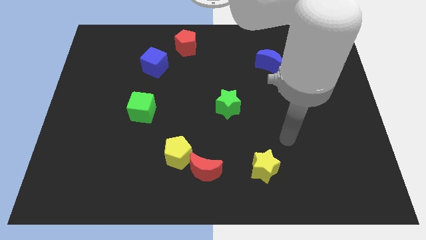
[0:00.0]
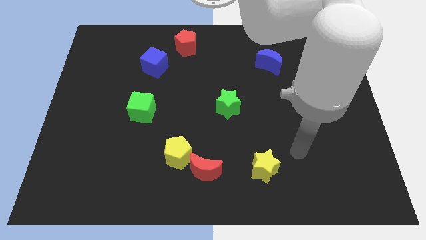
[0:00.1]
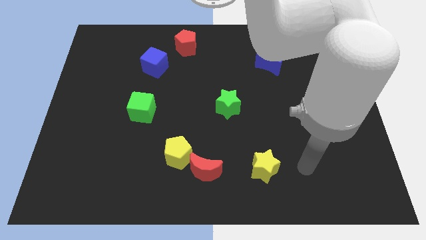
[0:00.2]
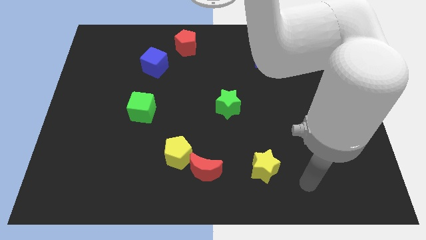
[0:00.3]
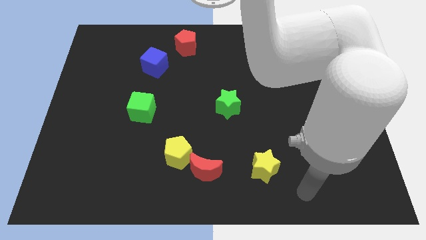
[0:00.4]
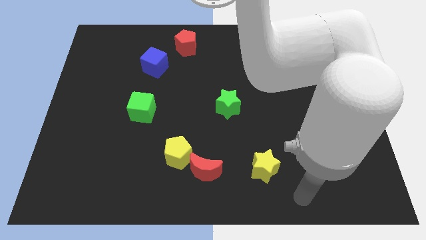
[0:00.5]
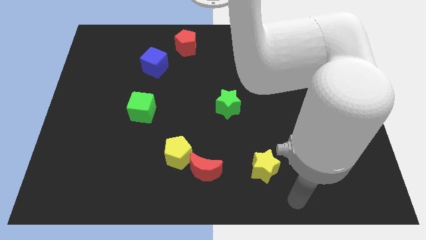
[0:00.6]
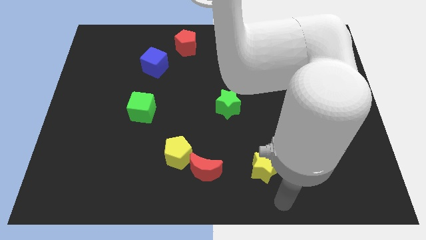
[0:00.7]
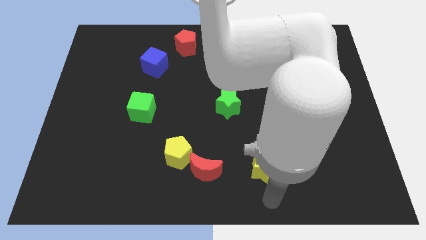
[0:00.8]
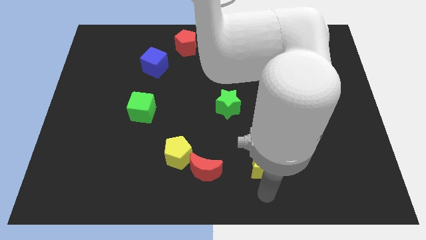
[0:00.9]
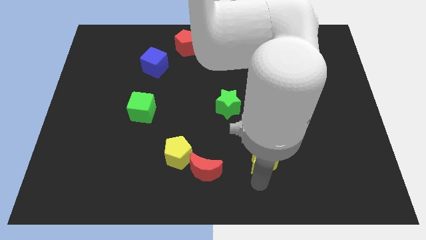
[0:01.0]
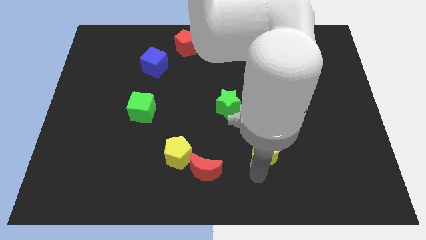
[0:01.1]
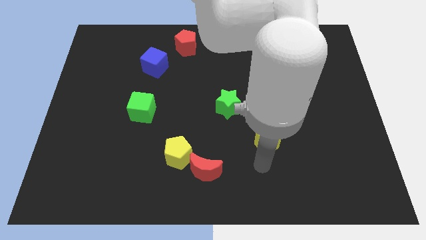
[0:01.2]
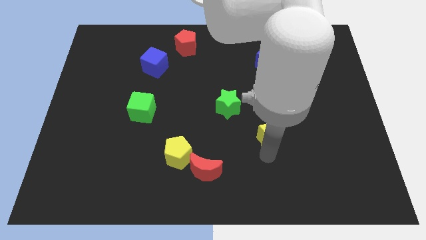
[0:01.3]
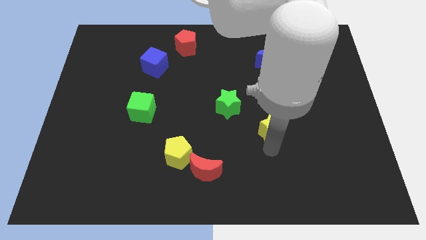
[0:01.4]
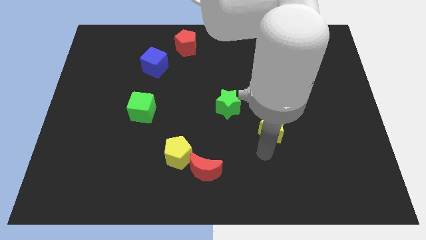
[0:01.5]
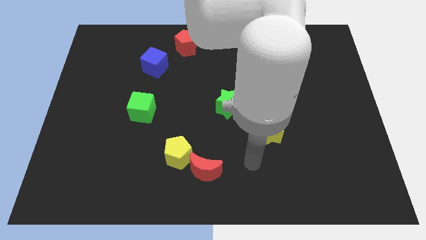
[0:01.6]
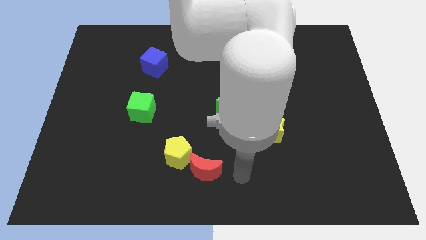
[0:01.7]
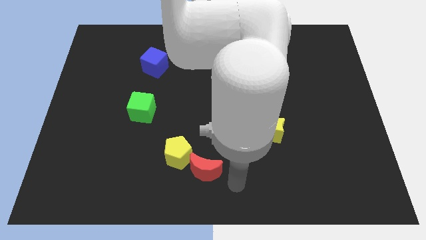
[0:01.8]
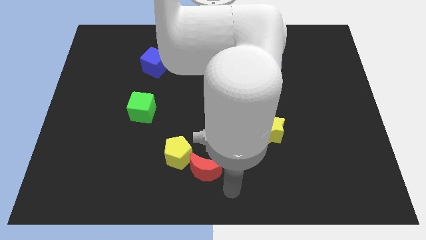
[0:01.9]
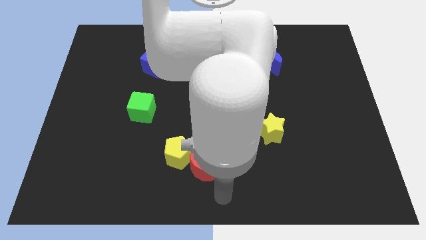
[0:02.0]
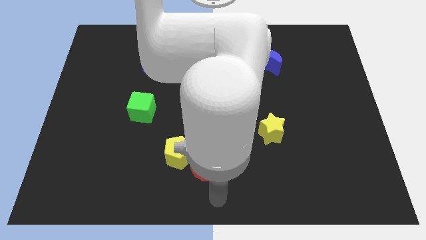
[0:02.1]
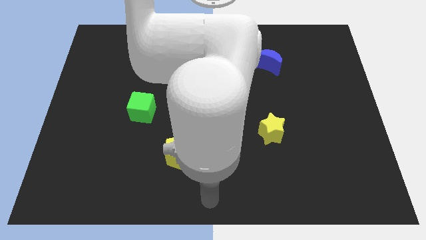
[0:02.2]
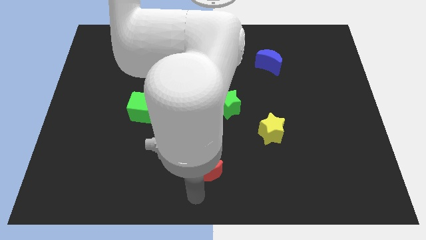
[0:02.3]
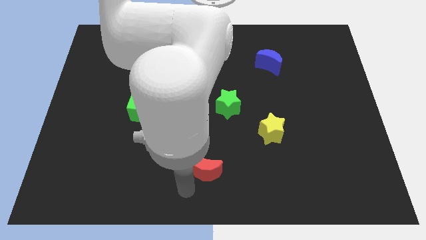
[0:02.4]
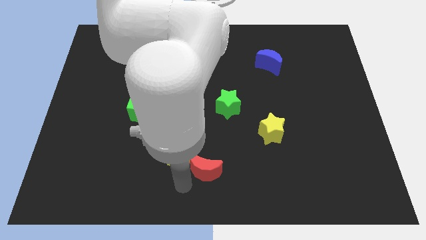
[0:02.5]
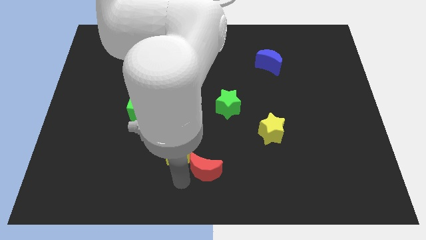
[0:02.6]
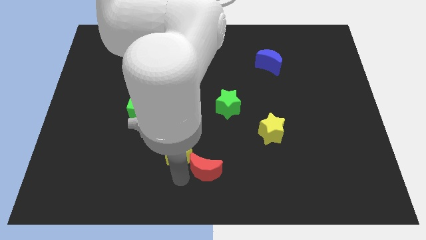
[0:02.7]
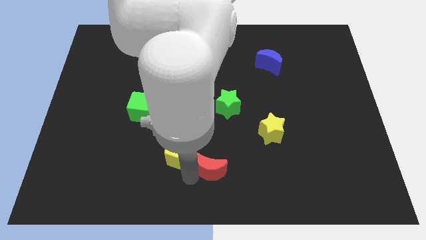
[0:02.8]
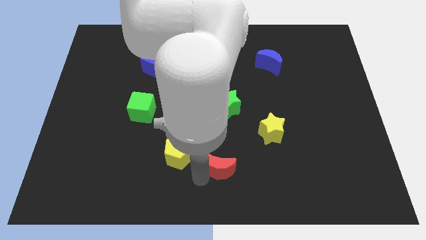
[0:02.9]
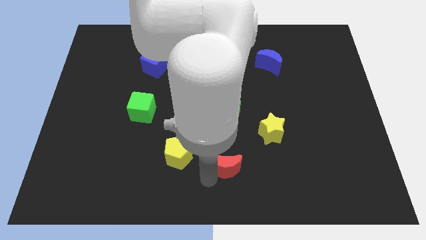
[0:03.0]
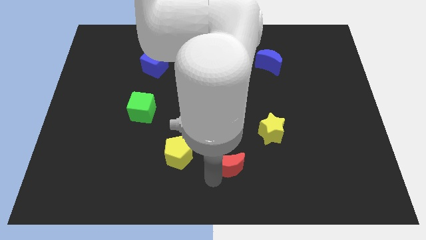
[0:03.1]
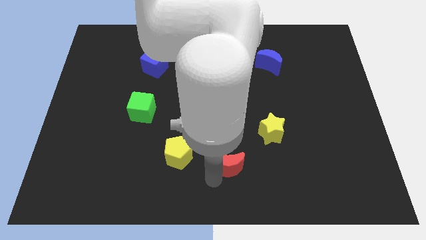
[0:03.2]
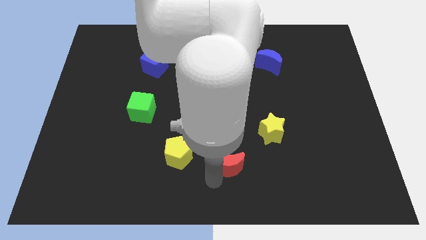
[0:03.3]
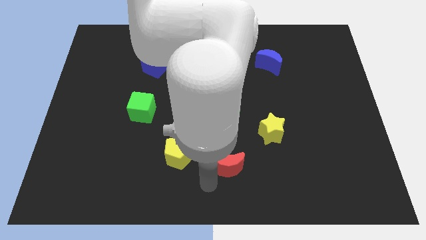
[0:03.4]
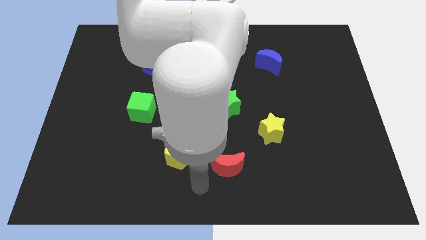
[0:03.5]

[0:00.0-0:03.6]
push the red moon and yellow star to bottom center

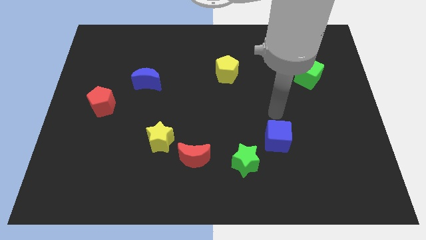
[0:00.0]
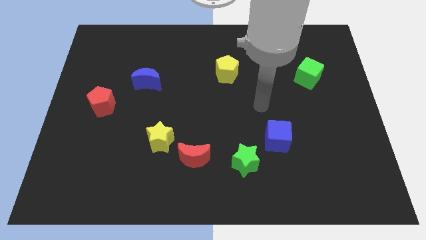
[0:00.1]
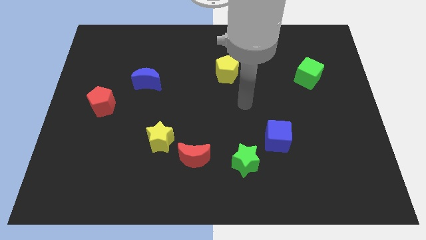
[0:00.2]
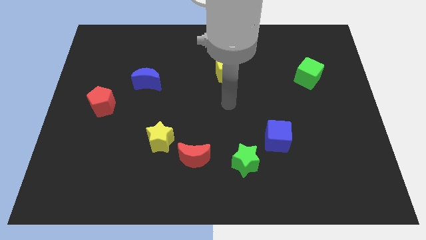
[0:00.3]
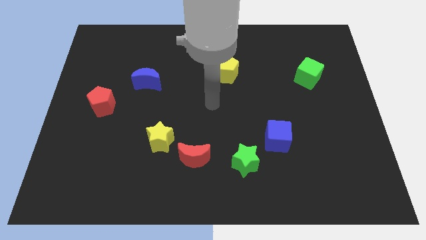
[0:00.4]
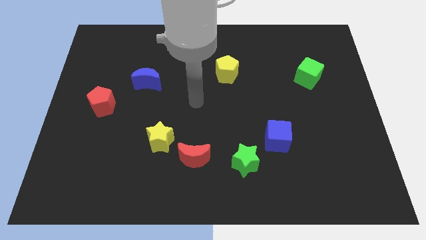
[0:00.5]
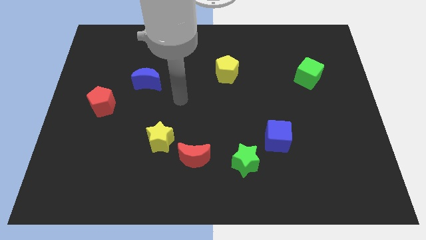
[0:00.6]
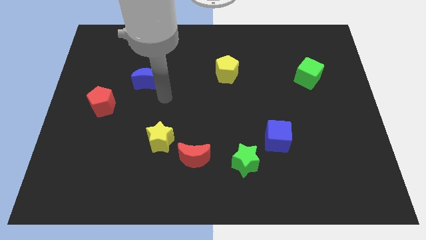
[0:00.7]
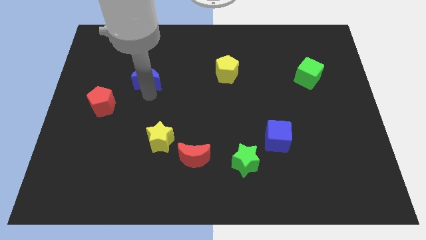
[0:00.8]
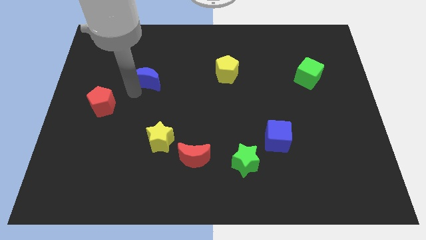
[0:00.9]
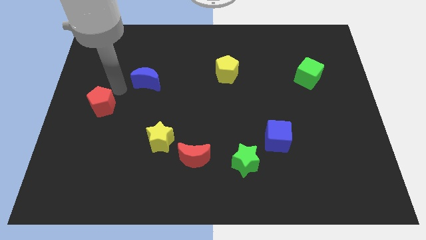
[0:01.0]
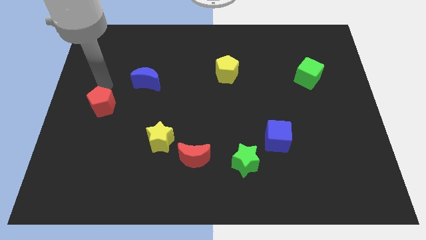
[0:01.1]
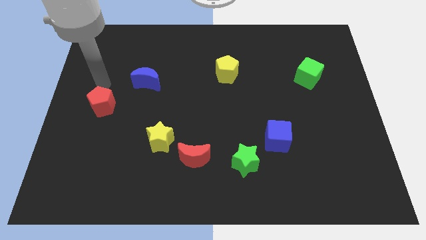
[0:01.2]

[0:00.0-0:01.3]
move your arm close to the red pentagon

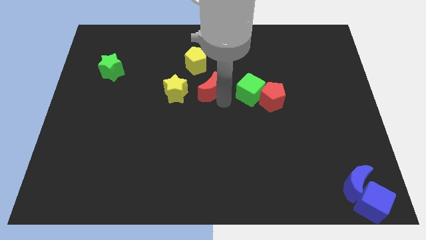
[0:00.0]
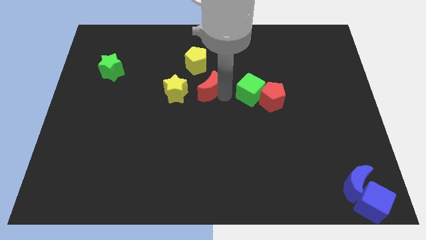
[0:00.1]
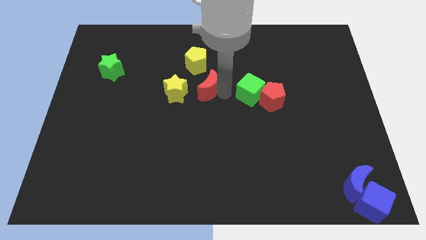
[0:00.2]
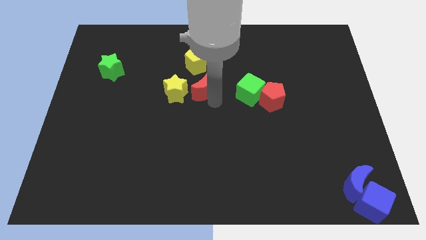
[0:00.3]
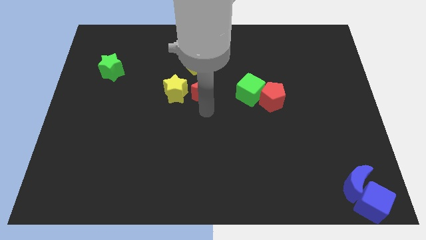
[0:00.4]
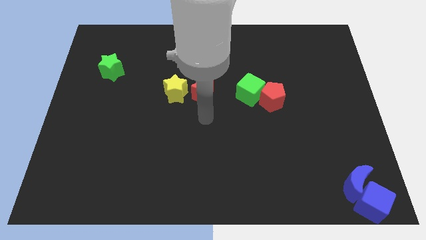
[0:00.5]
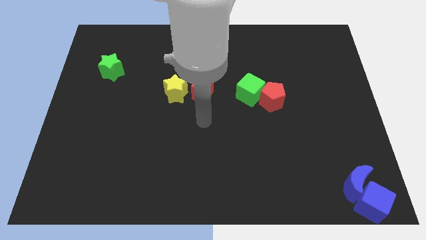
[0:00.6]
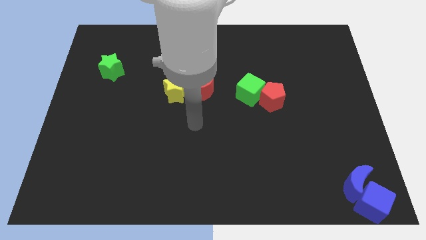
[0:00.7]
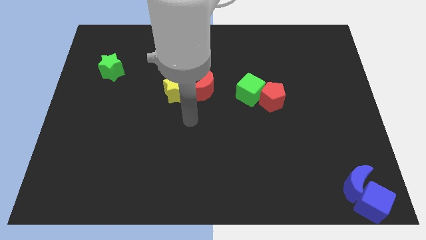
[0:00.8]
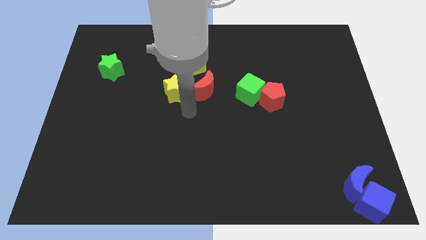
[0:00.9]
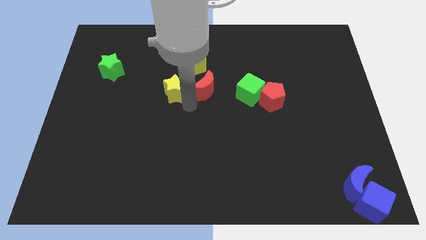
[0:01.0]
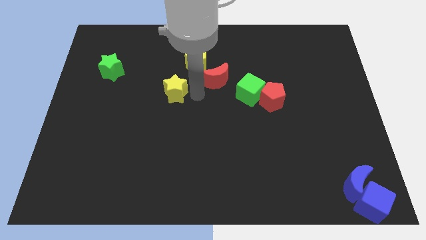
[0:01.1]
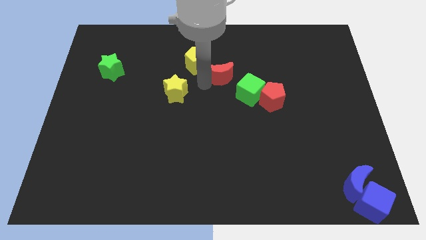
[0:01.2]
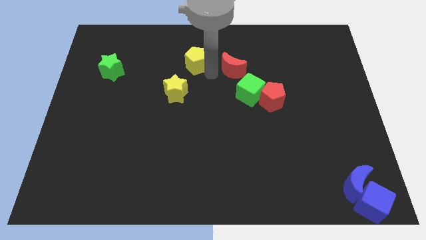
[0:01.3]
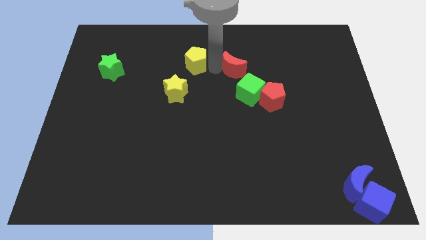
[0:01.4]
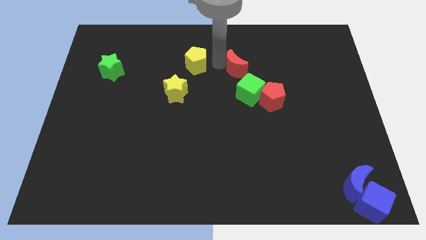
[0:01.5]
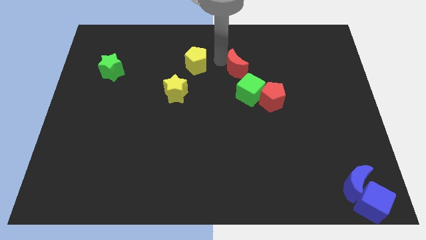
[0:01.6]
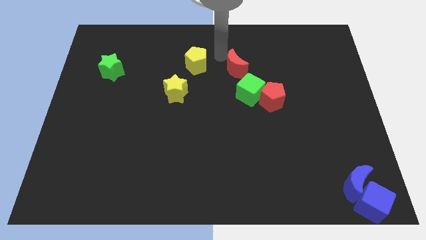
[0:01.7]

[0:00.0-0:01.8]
place the red crescent to the right of the yellow pentagon

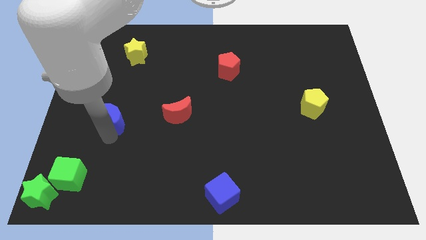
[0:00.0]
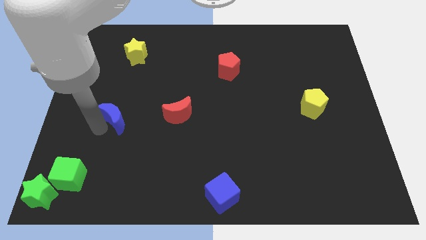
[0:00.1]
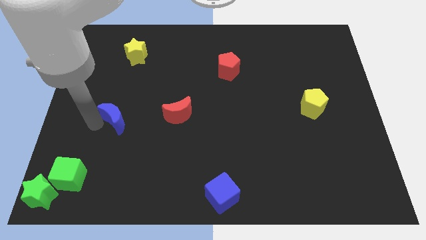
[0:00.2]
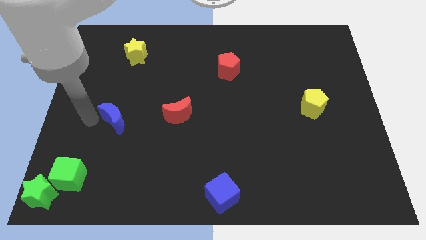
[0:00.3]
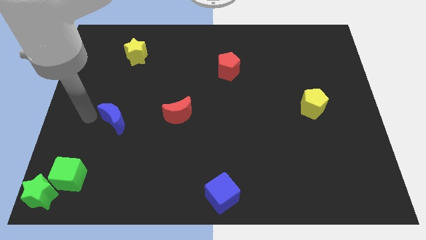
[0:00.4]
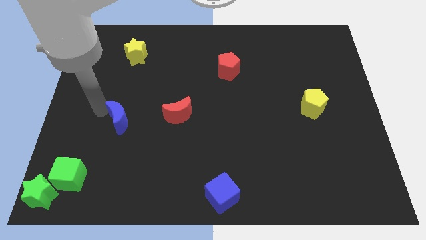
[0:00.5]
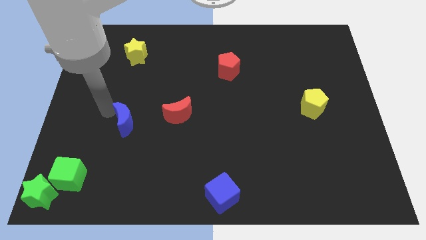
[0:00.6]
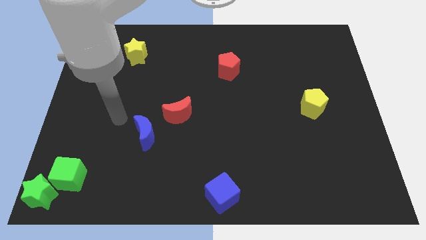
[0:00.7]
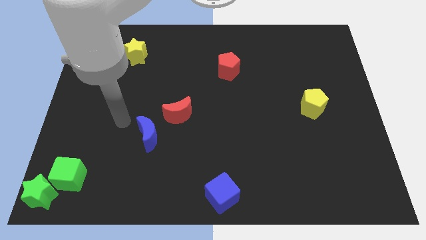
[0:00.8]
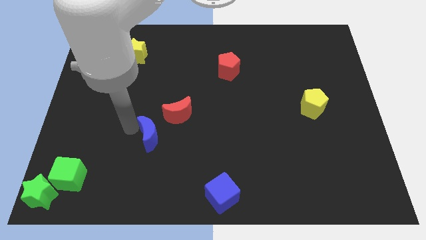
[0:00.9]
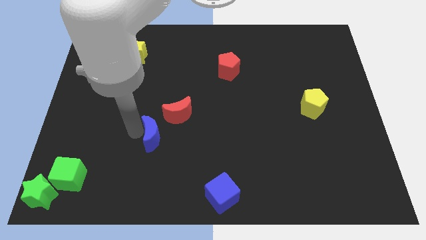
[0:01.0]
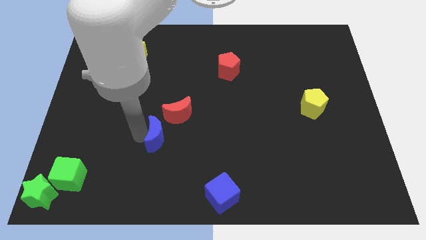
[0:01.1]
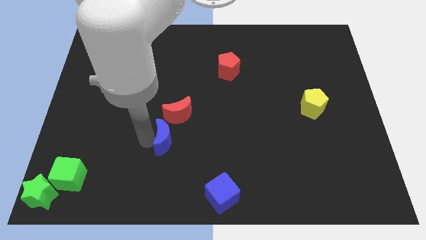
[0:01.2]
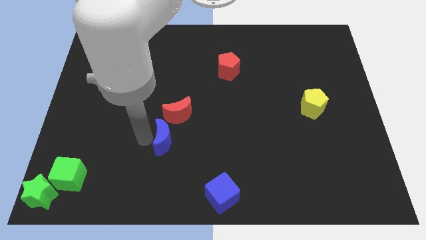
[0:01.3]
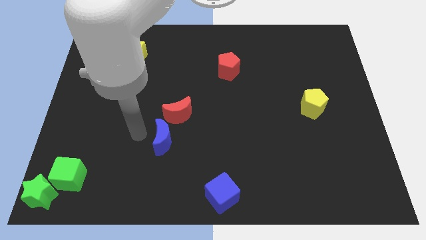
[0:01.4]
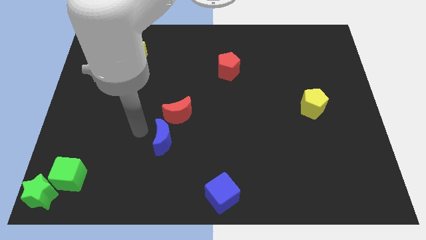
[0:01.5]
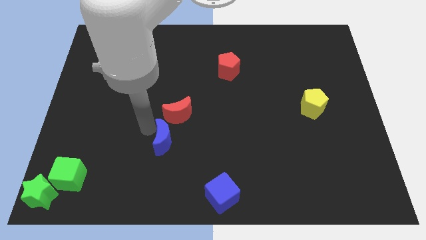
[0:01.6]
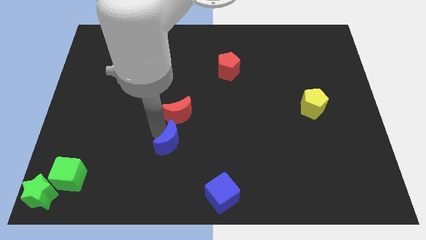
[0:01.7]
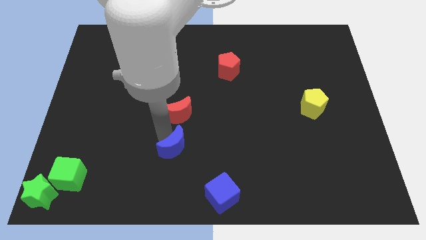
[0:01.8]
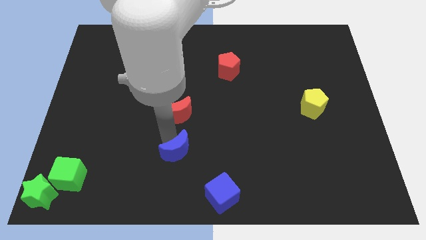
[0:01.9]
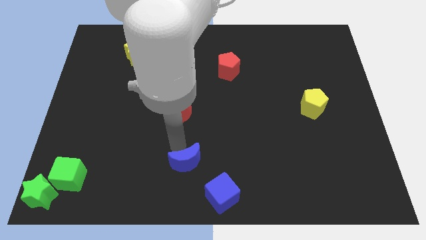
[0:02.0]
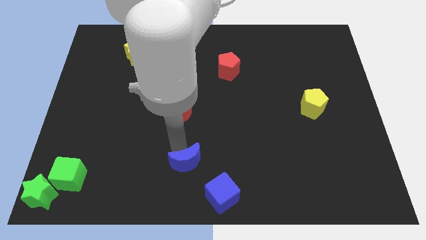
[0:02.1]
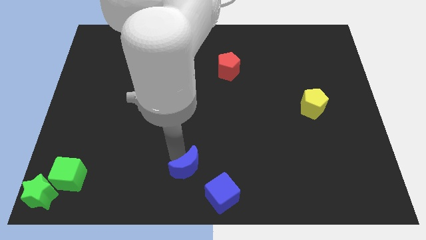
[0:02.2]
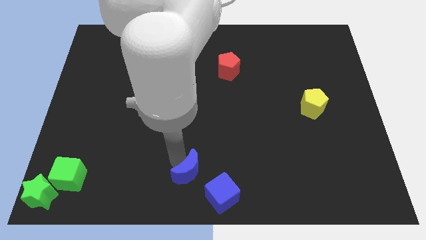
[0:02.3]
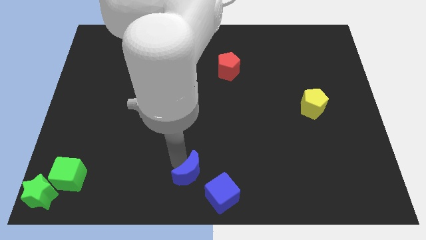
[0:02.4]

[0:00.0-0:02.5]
move the blue crescent diagonal above the blue cube
